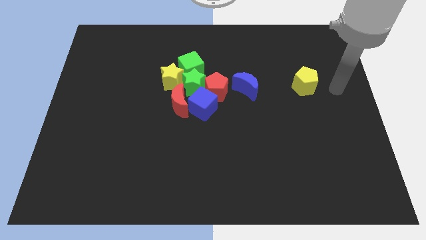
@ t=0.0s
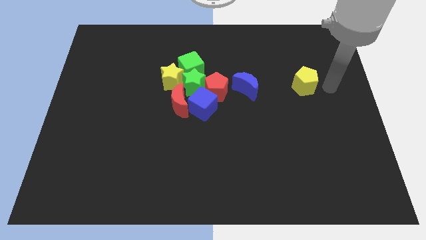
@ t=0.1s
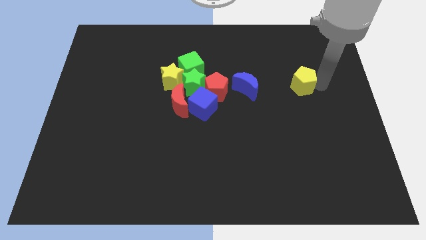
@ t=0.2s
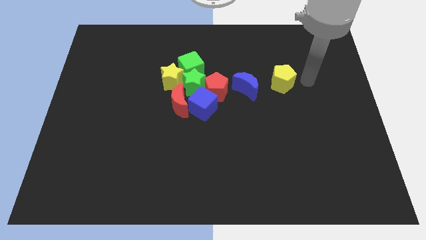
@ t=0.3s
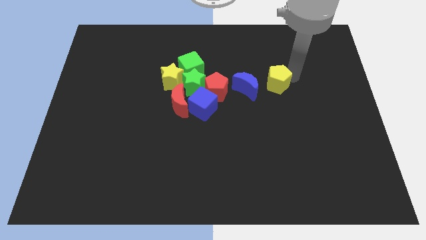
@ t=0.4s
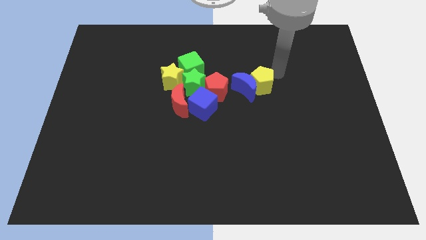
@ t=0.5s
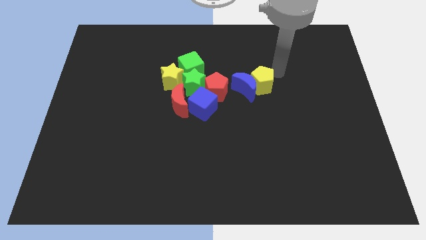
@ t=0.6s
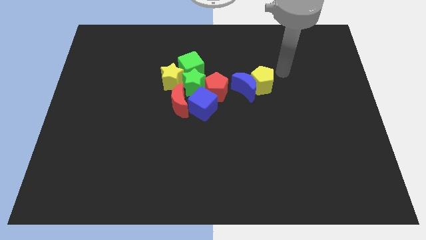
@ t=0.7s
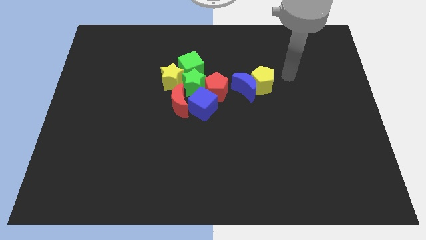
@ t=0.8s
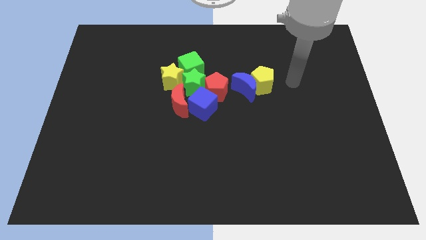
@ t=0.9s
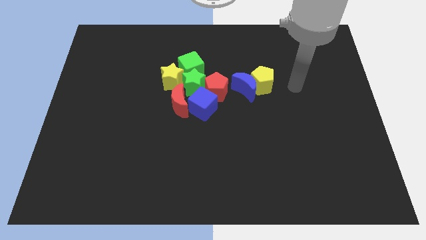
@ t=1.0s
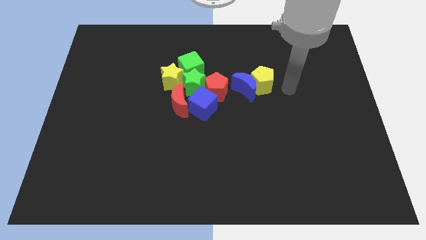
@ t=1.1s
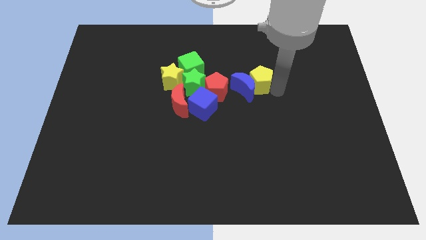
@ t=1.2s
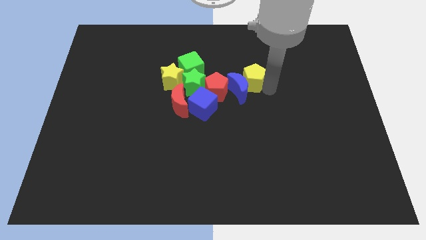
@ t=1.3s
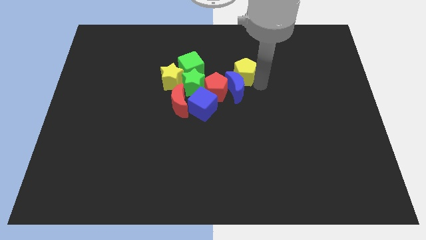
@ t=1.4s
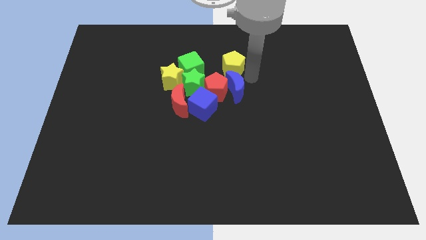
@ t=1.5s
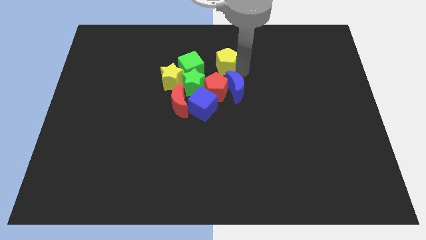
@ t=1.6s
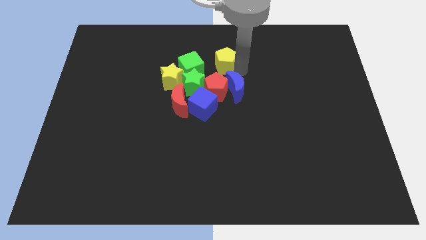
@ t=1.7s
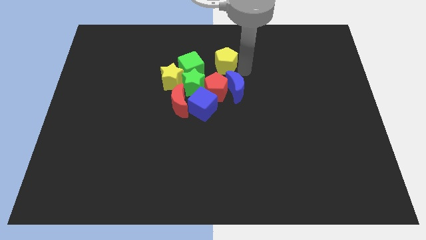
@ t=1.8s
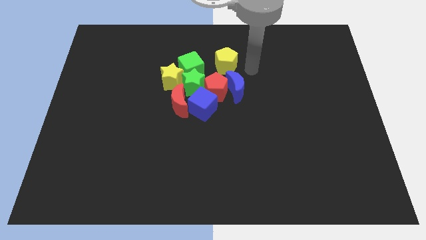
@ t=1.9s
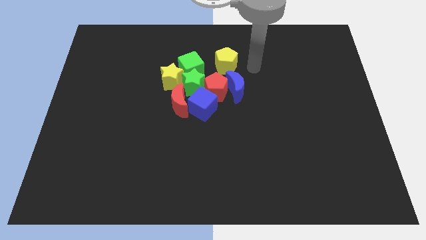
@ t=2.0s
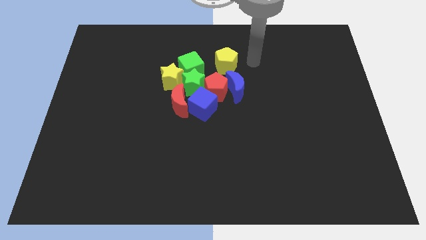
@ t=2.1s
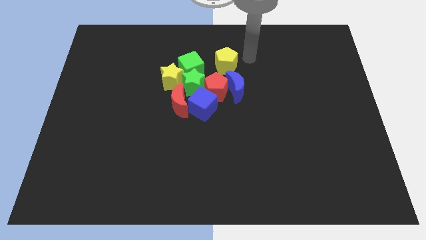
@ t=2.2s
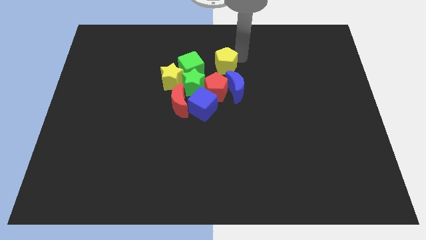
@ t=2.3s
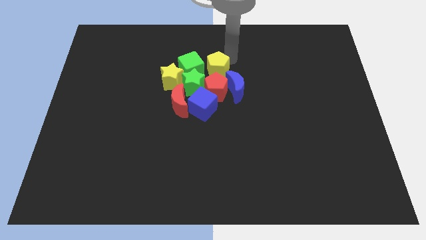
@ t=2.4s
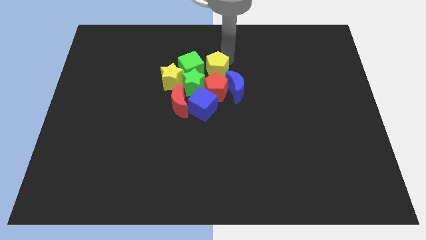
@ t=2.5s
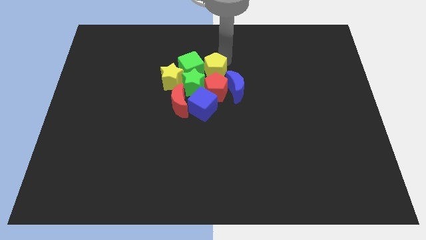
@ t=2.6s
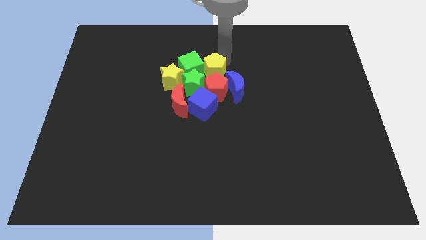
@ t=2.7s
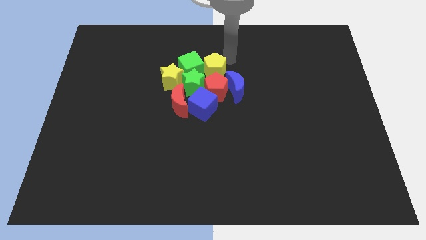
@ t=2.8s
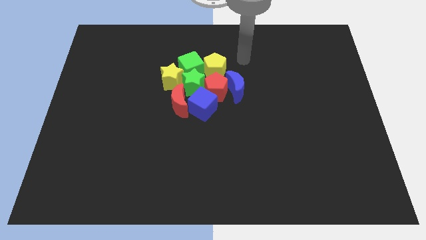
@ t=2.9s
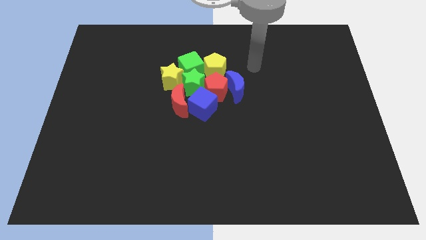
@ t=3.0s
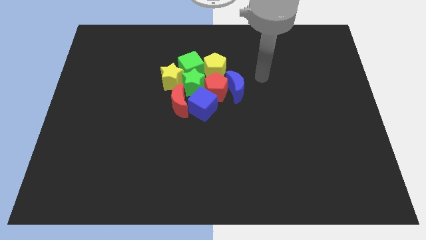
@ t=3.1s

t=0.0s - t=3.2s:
push yellow pentagon into green cube

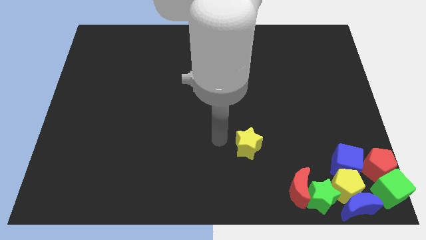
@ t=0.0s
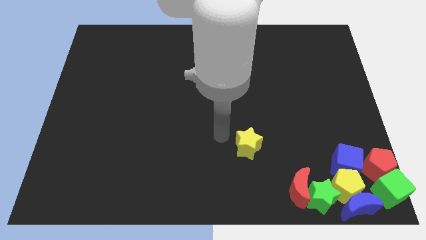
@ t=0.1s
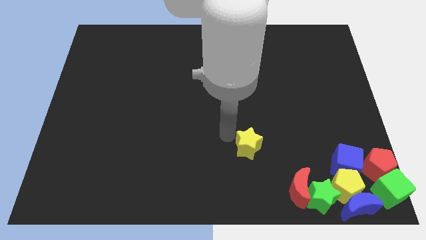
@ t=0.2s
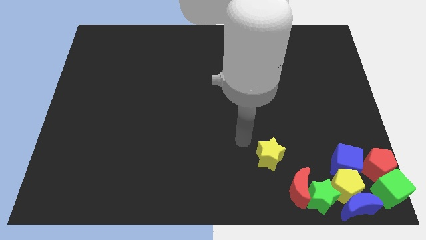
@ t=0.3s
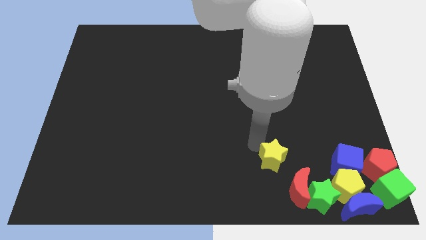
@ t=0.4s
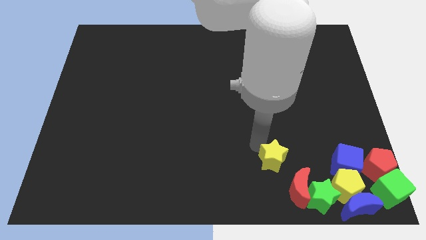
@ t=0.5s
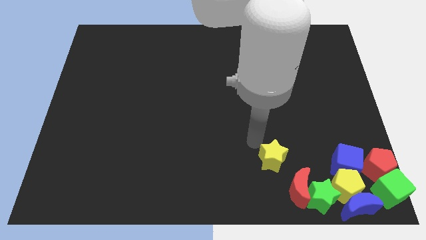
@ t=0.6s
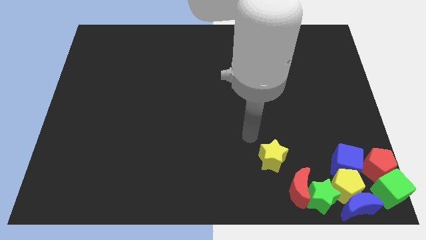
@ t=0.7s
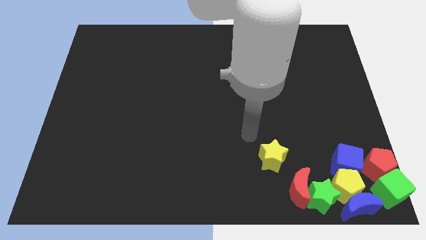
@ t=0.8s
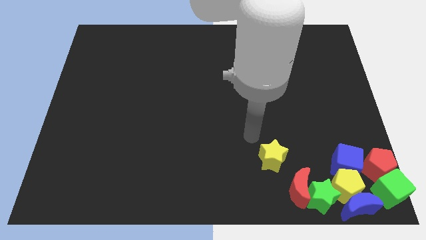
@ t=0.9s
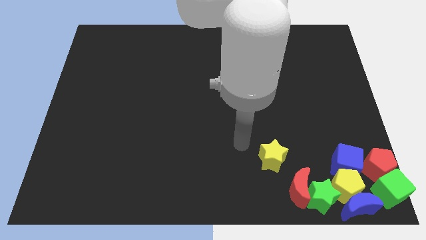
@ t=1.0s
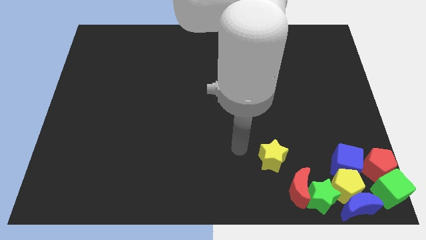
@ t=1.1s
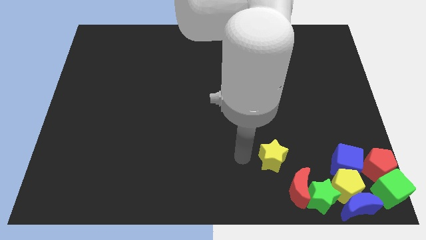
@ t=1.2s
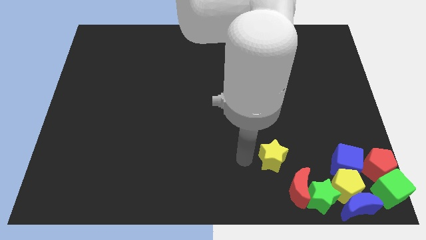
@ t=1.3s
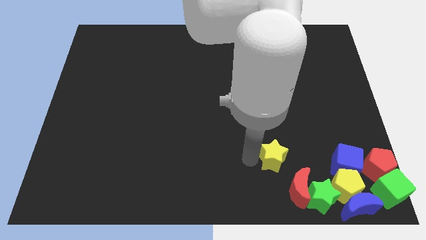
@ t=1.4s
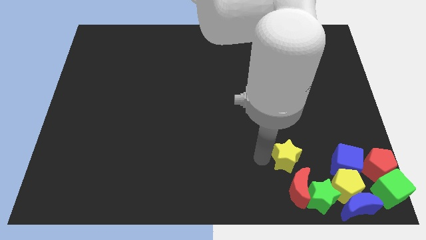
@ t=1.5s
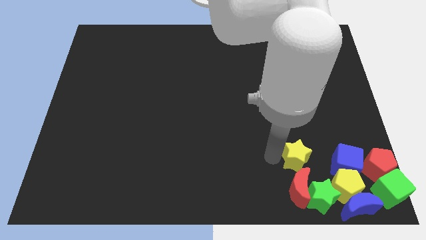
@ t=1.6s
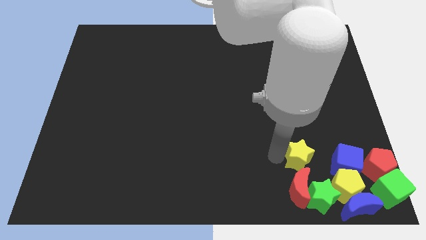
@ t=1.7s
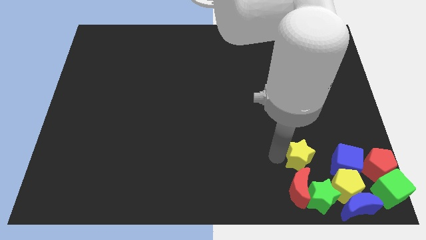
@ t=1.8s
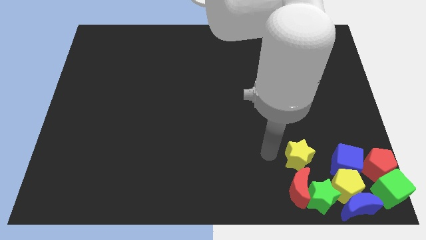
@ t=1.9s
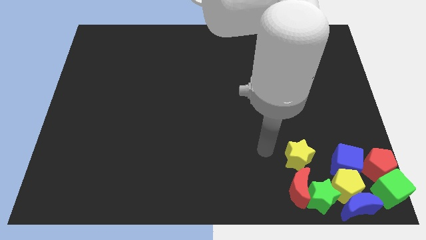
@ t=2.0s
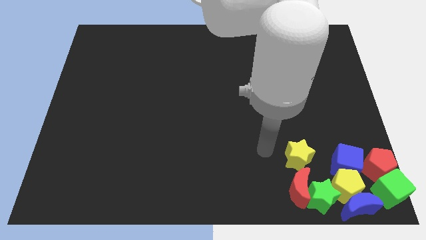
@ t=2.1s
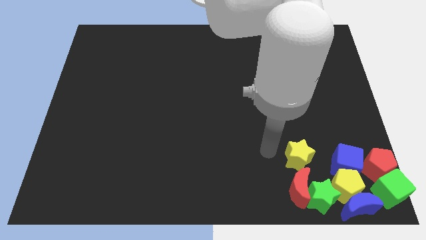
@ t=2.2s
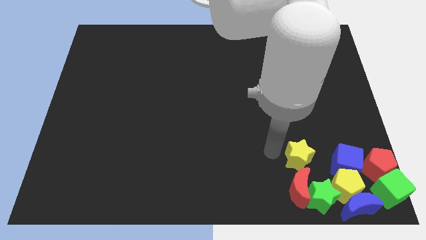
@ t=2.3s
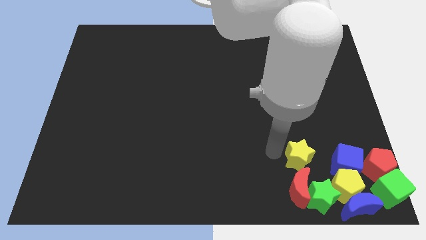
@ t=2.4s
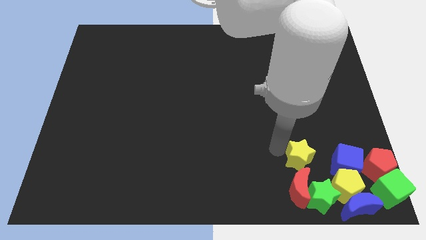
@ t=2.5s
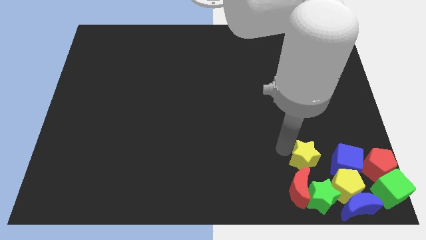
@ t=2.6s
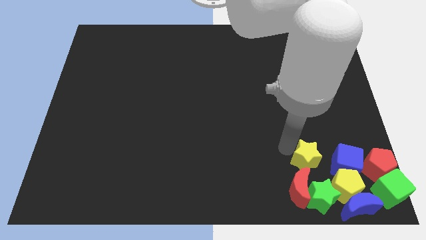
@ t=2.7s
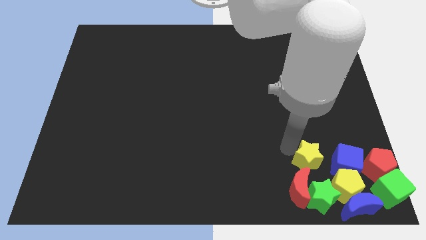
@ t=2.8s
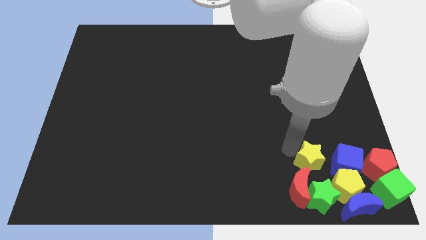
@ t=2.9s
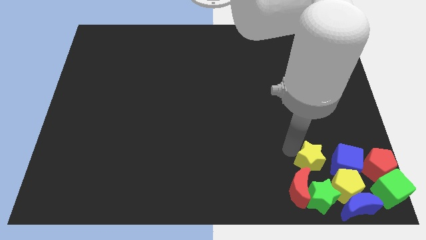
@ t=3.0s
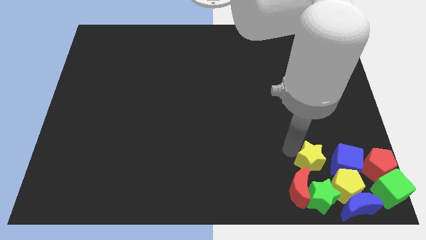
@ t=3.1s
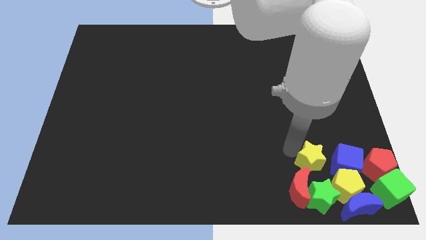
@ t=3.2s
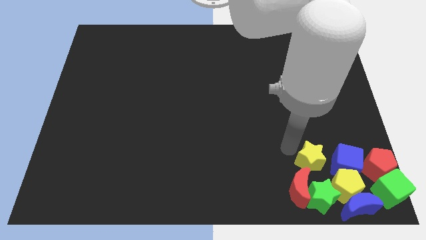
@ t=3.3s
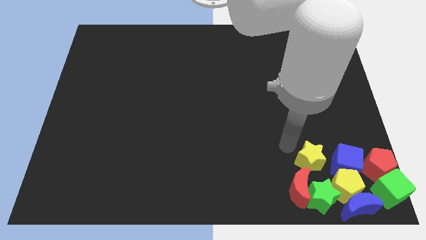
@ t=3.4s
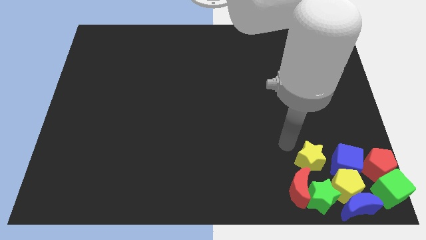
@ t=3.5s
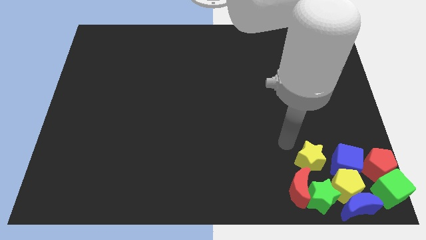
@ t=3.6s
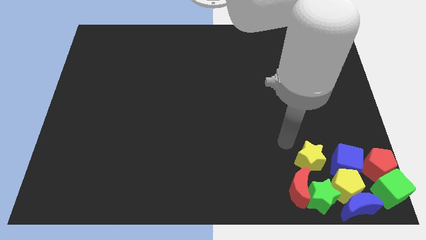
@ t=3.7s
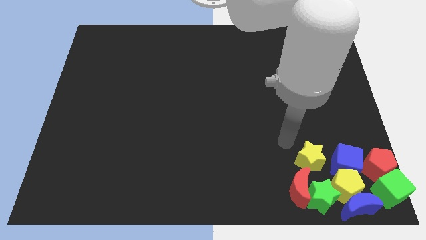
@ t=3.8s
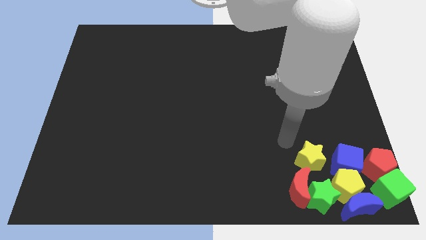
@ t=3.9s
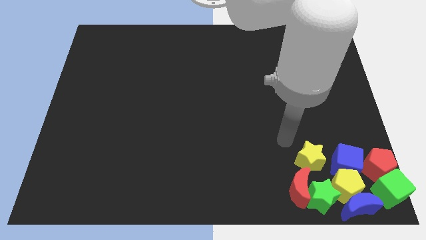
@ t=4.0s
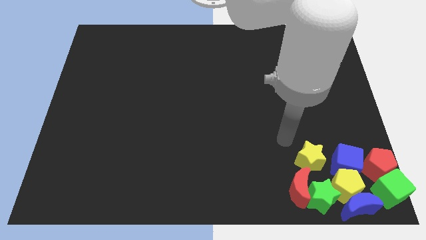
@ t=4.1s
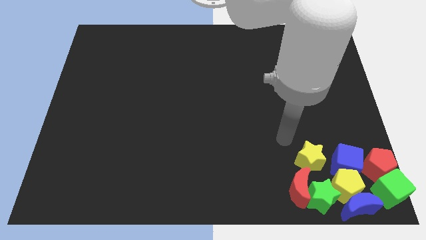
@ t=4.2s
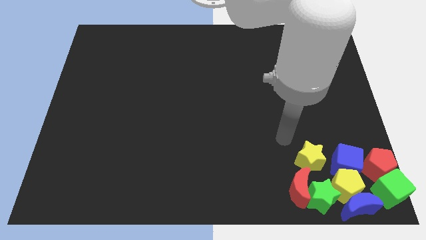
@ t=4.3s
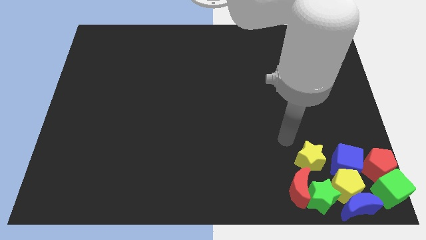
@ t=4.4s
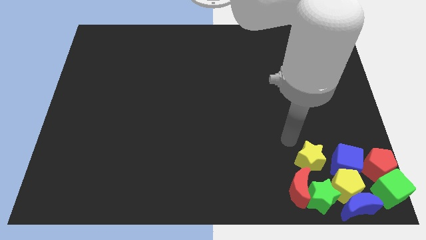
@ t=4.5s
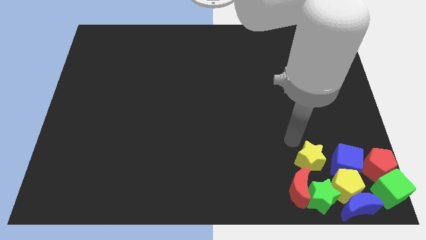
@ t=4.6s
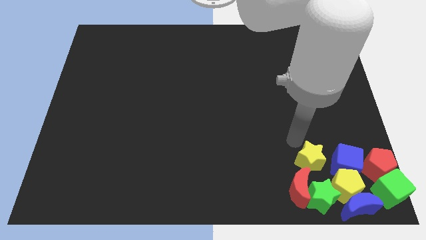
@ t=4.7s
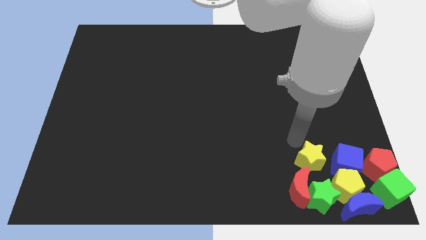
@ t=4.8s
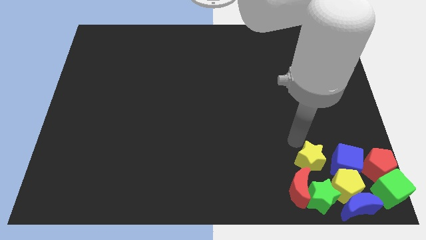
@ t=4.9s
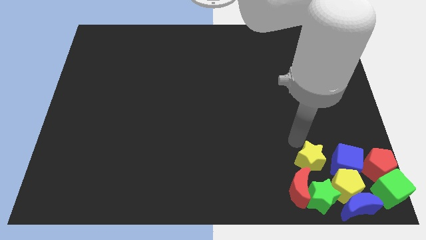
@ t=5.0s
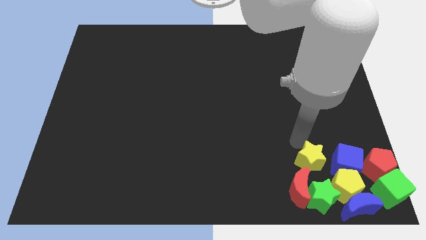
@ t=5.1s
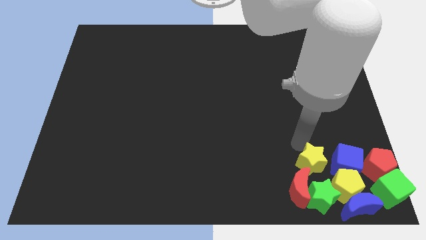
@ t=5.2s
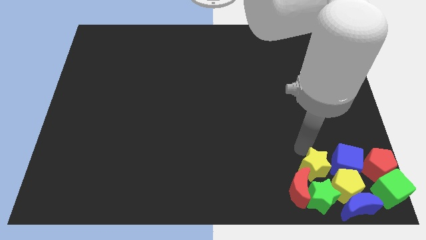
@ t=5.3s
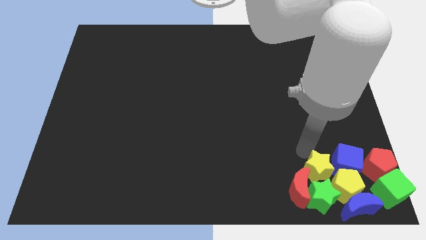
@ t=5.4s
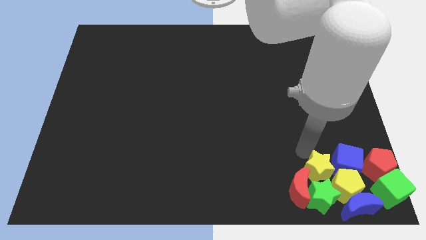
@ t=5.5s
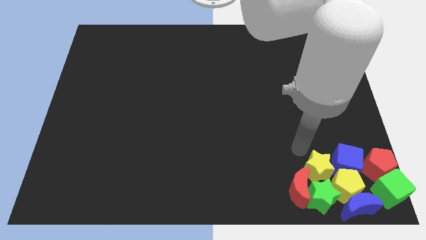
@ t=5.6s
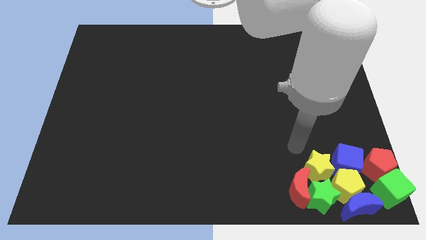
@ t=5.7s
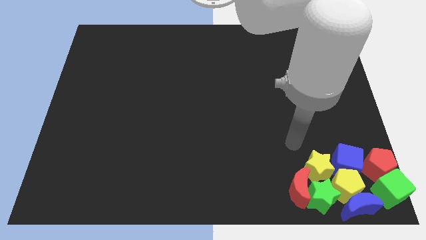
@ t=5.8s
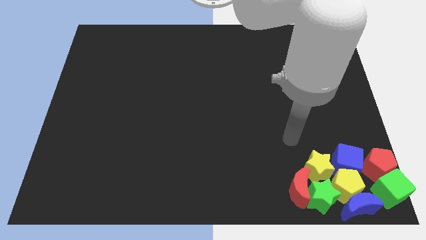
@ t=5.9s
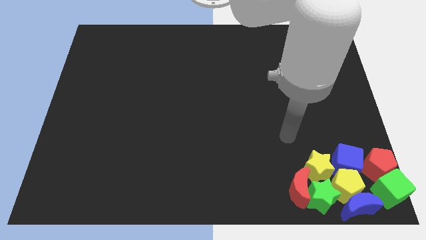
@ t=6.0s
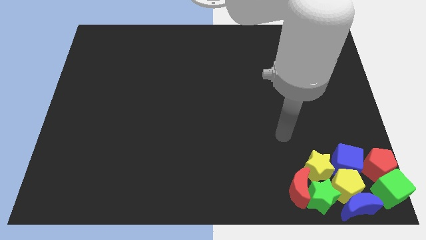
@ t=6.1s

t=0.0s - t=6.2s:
push the yellow star to the top of the green star
